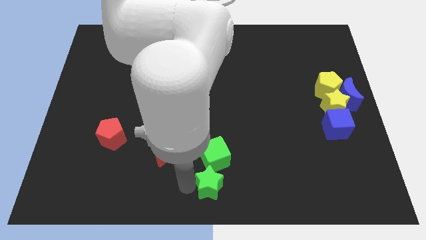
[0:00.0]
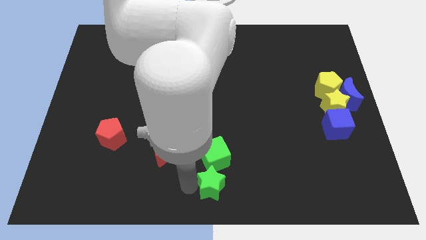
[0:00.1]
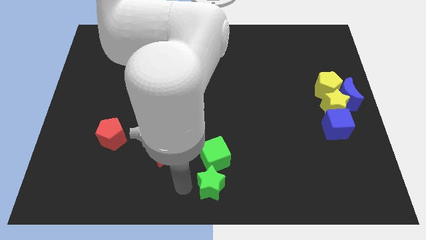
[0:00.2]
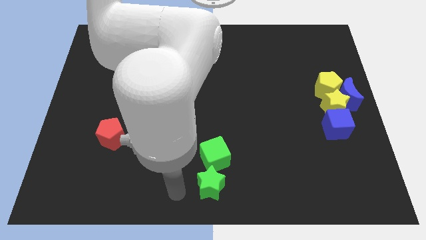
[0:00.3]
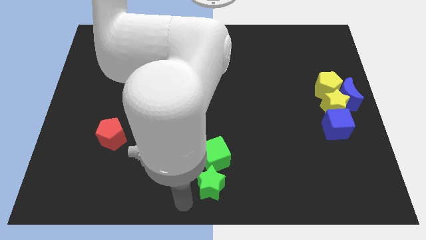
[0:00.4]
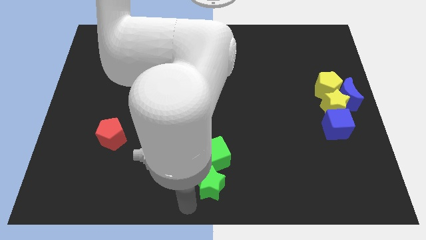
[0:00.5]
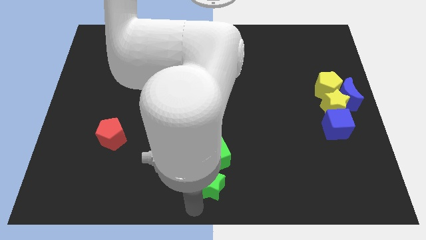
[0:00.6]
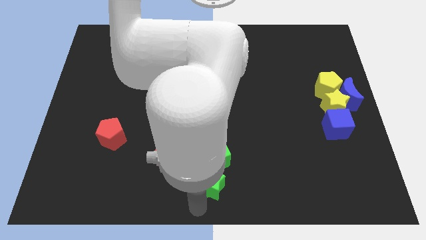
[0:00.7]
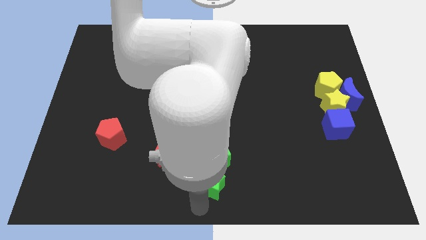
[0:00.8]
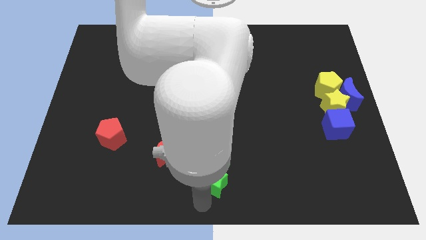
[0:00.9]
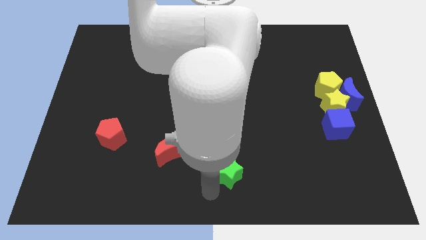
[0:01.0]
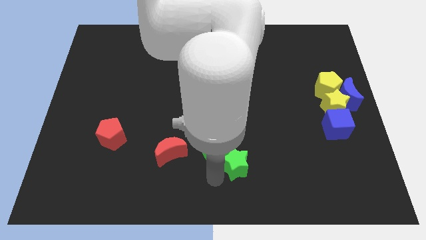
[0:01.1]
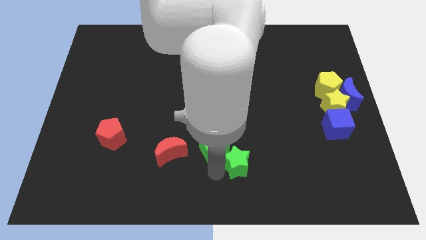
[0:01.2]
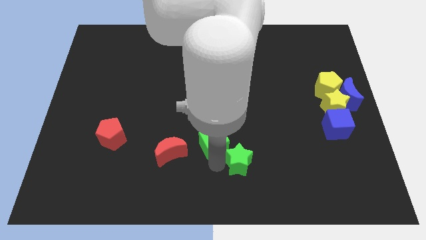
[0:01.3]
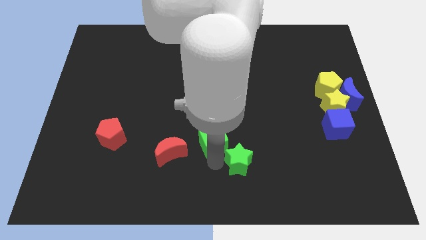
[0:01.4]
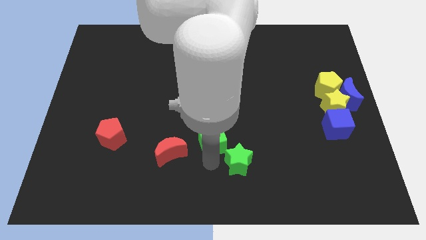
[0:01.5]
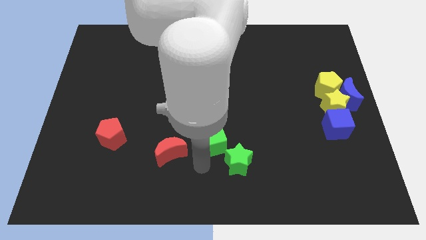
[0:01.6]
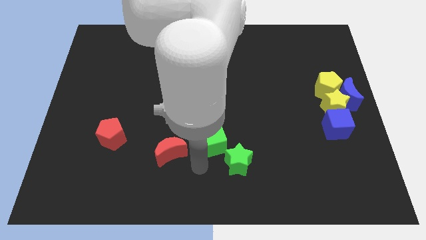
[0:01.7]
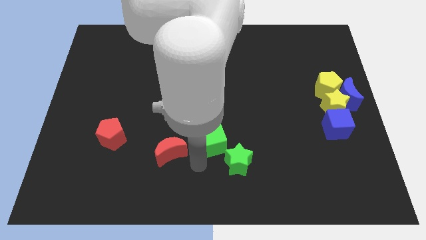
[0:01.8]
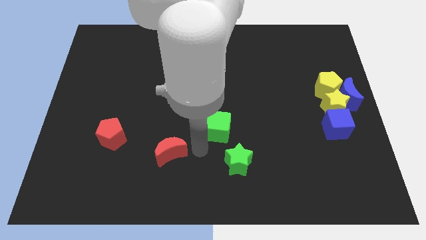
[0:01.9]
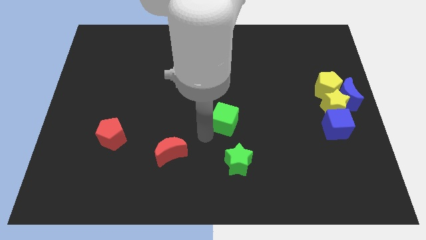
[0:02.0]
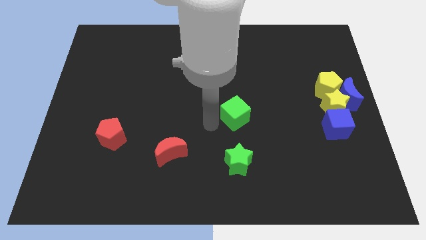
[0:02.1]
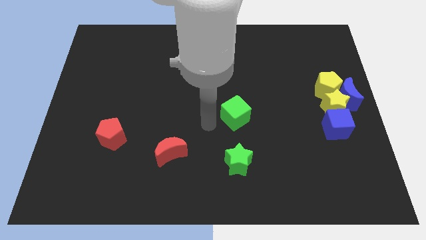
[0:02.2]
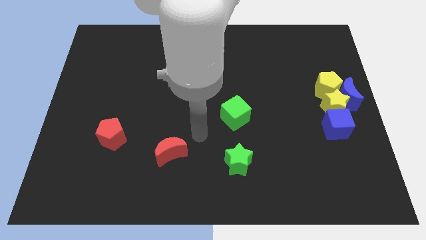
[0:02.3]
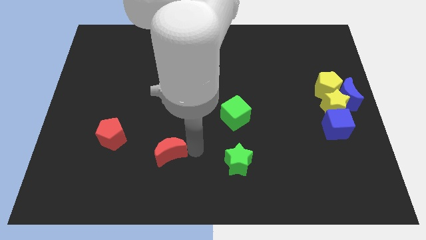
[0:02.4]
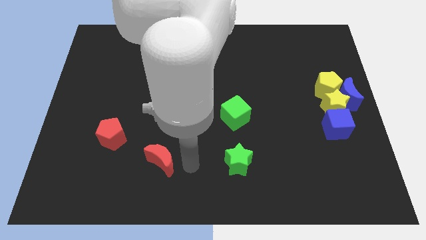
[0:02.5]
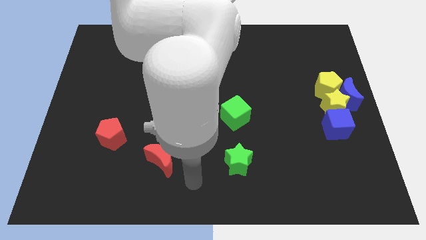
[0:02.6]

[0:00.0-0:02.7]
place the green cube and green star to the right side of the red crescent

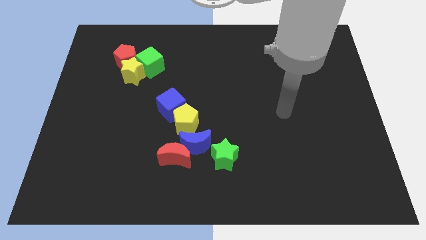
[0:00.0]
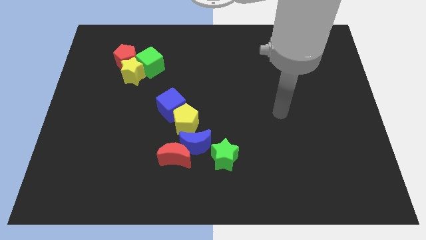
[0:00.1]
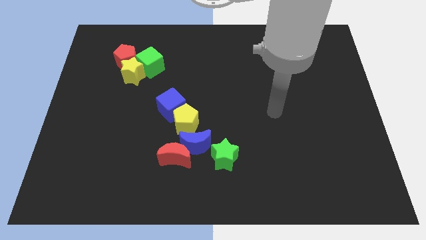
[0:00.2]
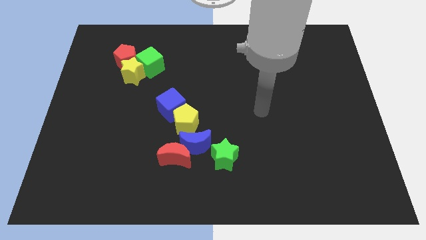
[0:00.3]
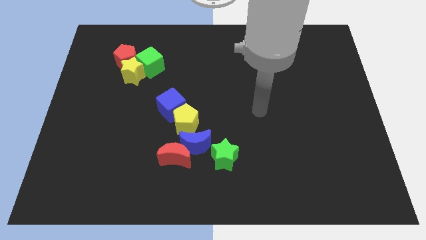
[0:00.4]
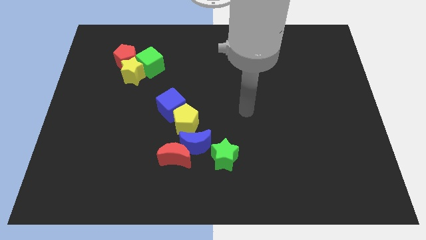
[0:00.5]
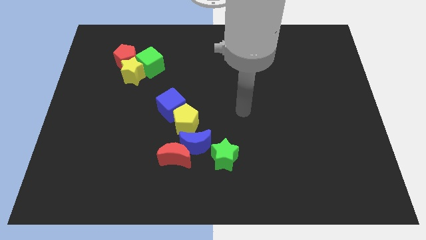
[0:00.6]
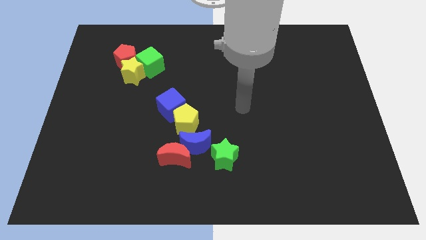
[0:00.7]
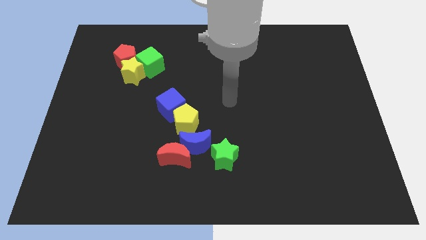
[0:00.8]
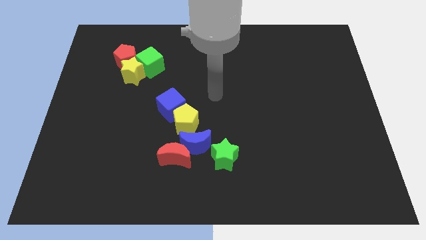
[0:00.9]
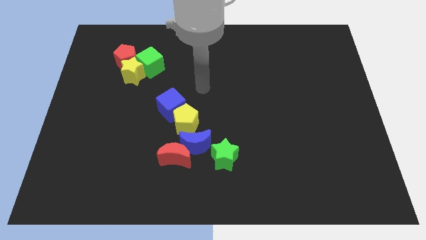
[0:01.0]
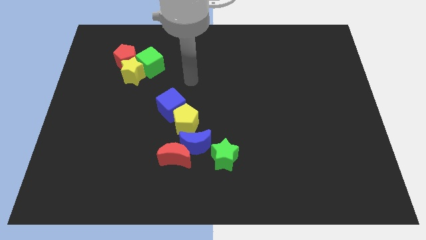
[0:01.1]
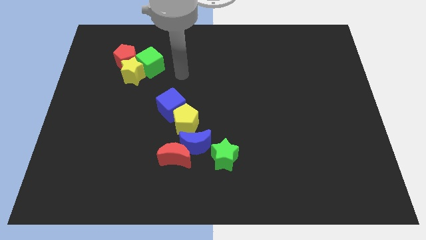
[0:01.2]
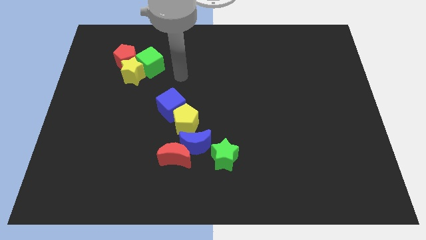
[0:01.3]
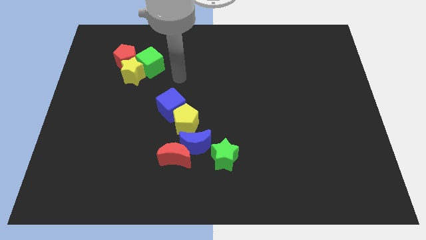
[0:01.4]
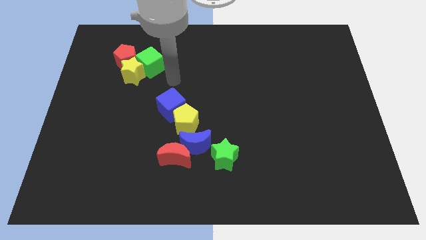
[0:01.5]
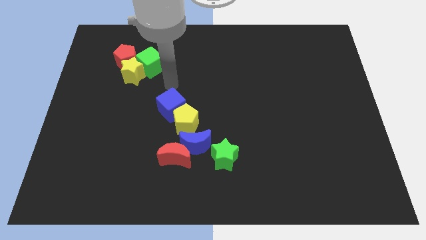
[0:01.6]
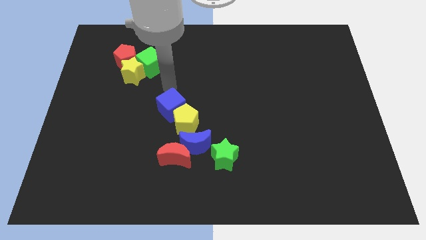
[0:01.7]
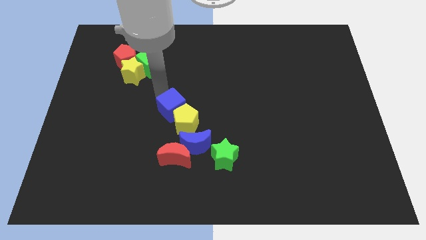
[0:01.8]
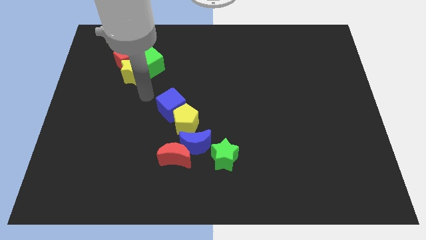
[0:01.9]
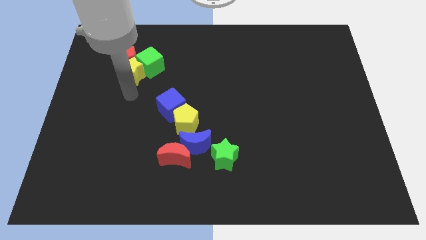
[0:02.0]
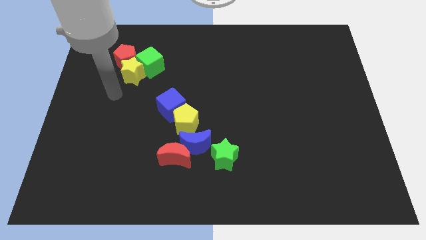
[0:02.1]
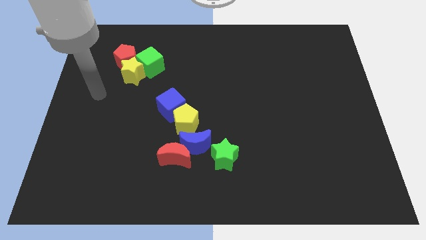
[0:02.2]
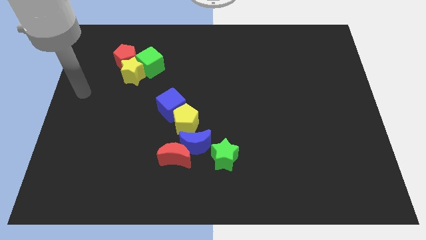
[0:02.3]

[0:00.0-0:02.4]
move your arm from the center of the board to the left side

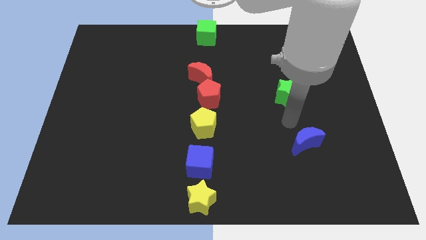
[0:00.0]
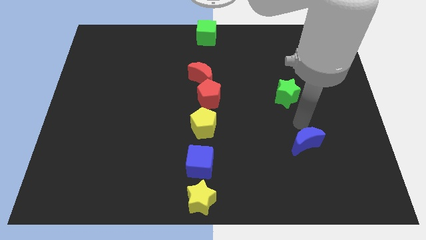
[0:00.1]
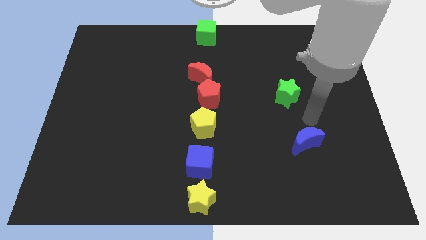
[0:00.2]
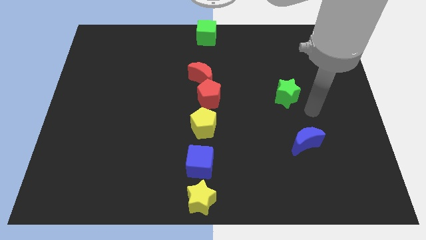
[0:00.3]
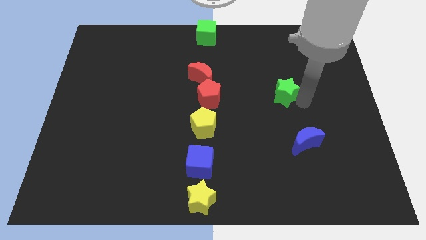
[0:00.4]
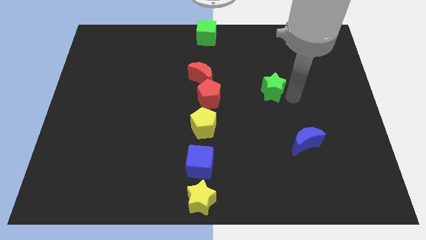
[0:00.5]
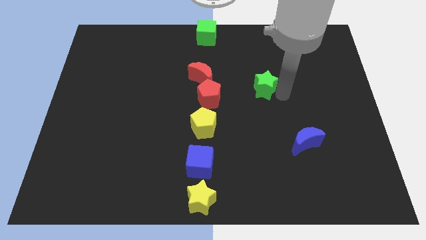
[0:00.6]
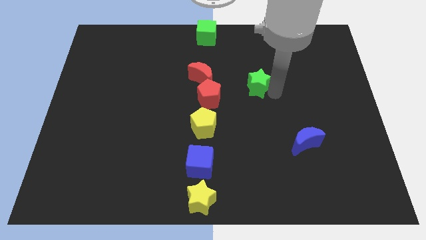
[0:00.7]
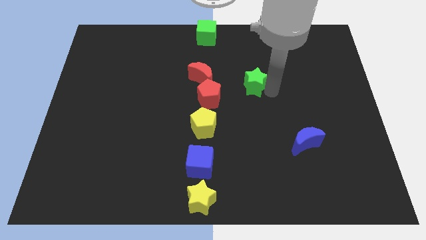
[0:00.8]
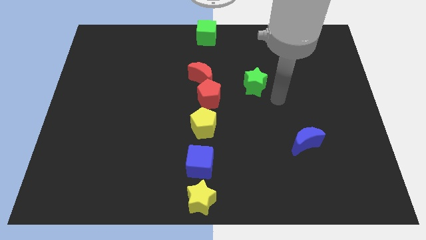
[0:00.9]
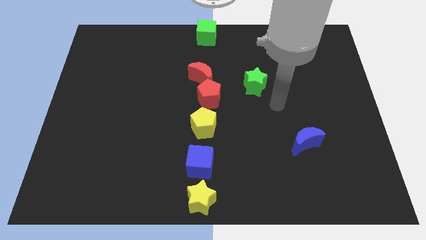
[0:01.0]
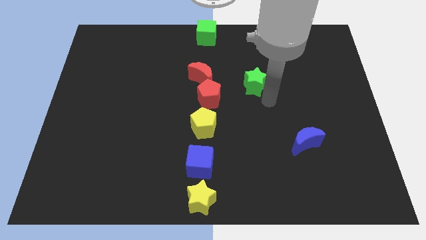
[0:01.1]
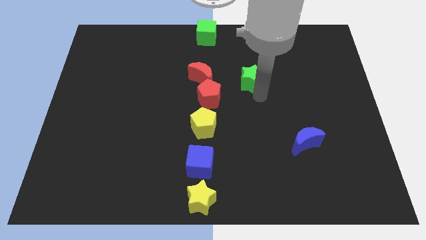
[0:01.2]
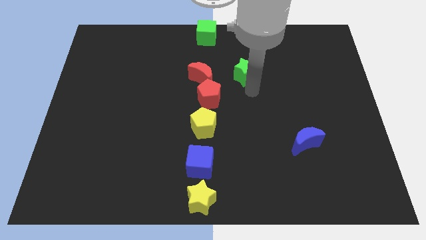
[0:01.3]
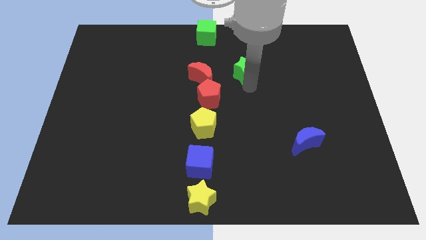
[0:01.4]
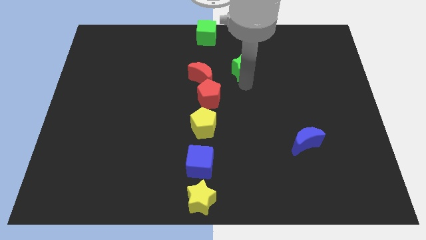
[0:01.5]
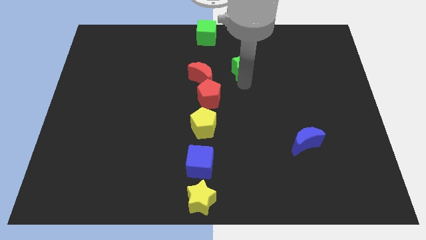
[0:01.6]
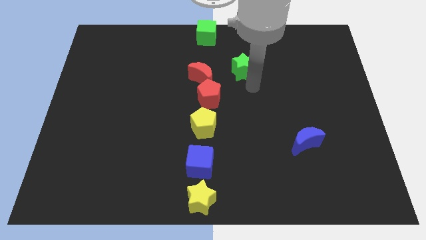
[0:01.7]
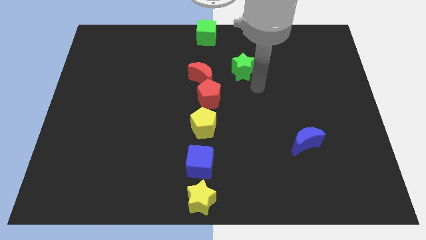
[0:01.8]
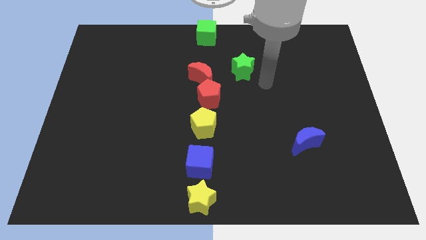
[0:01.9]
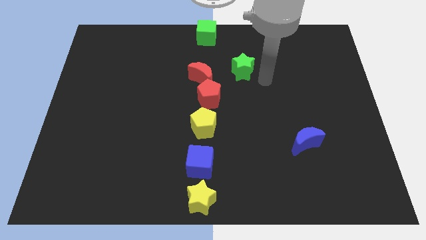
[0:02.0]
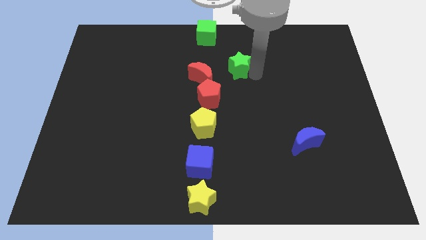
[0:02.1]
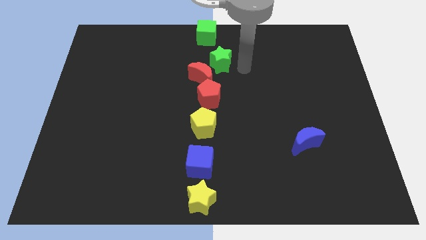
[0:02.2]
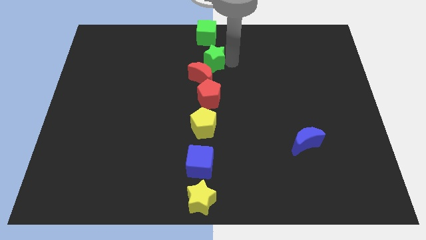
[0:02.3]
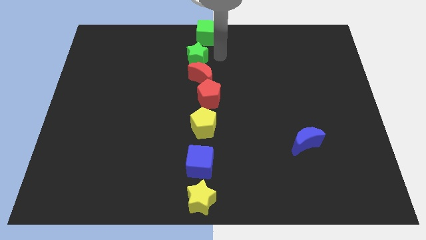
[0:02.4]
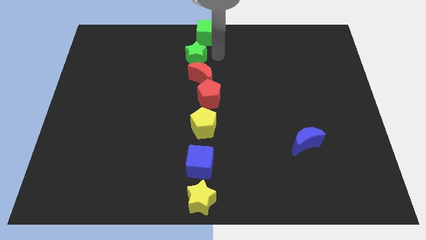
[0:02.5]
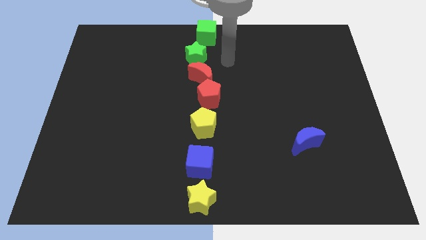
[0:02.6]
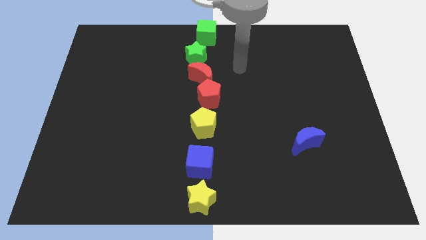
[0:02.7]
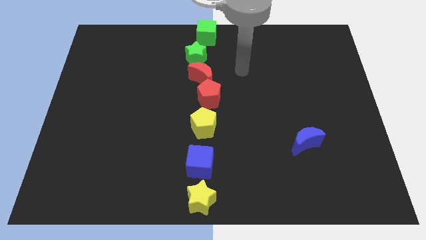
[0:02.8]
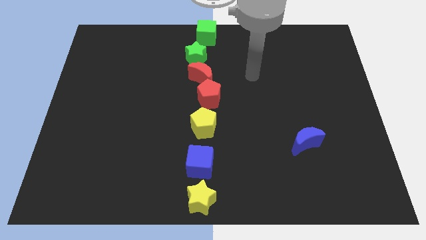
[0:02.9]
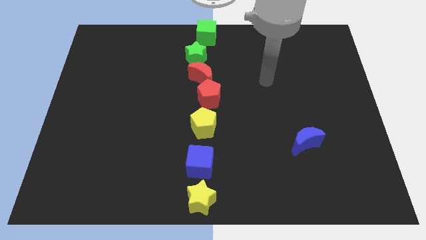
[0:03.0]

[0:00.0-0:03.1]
move the green star above the red crescent

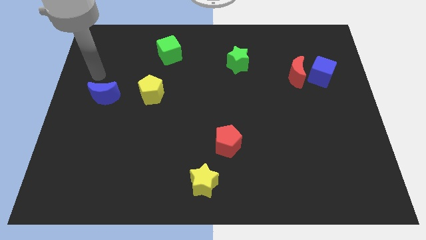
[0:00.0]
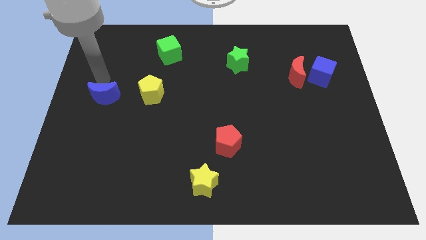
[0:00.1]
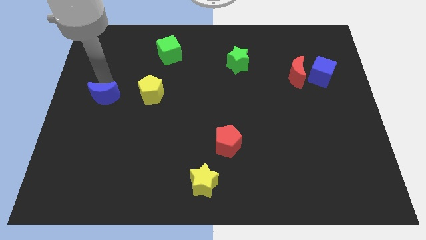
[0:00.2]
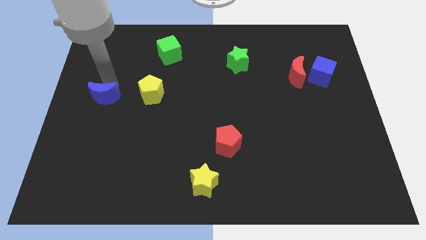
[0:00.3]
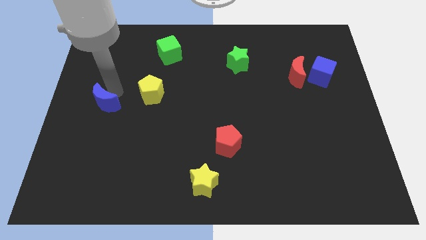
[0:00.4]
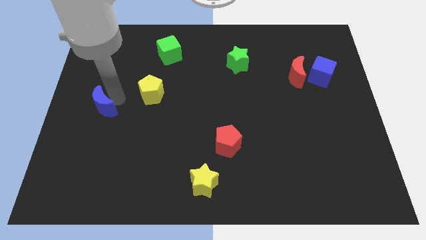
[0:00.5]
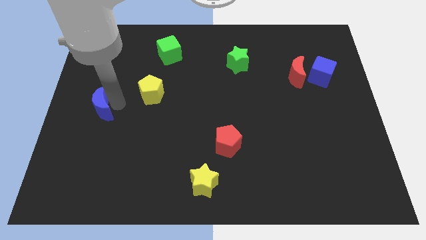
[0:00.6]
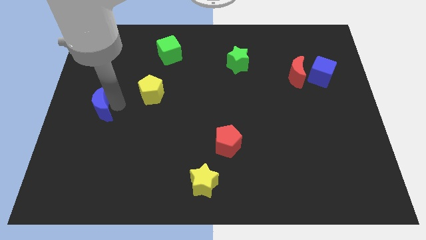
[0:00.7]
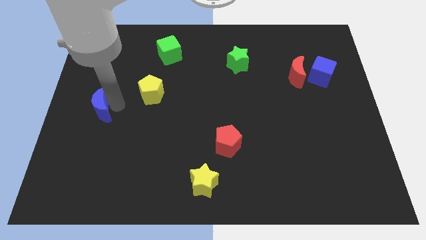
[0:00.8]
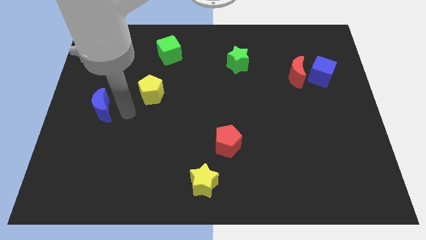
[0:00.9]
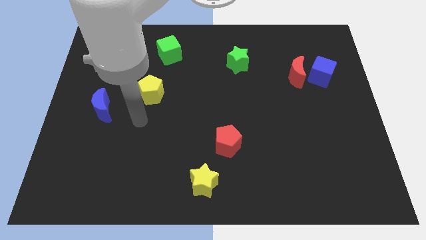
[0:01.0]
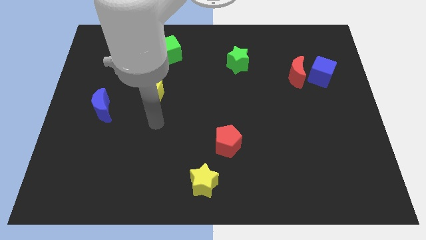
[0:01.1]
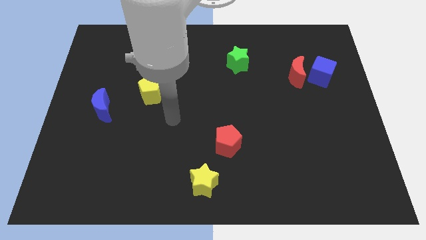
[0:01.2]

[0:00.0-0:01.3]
slightly push the blue crescent down the board
